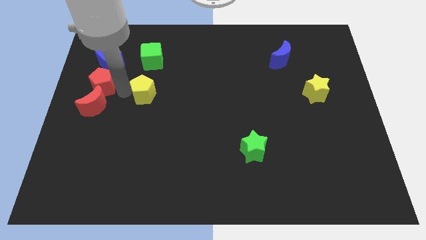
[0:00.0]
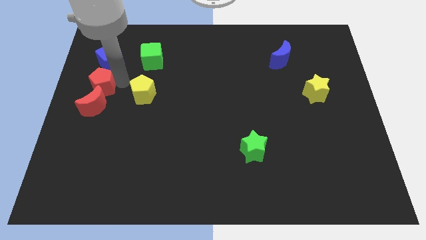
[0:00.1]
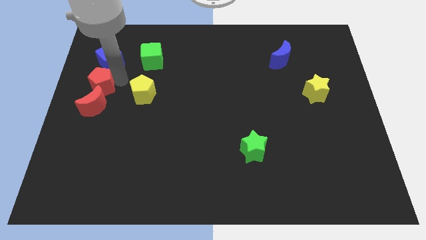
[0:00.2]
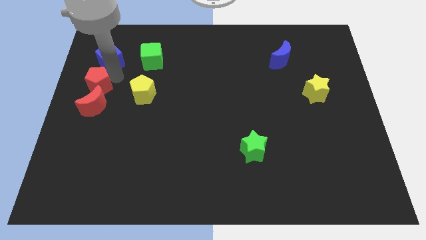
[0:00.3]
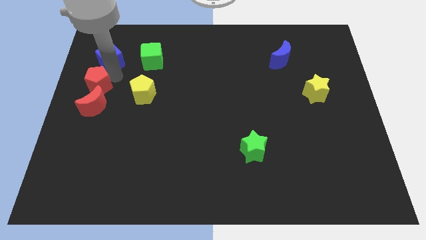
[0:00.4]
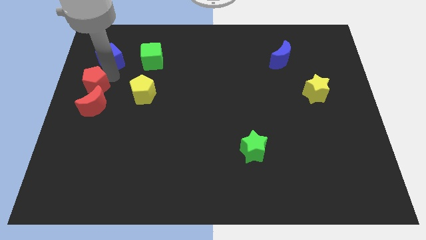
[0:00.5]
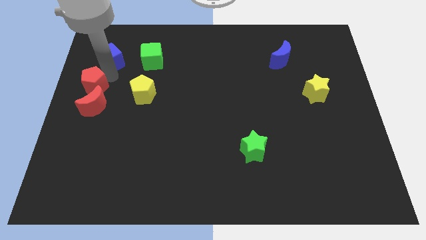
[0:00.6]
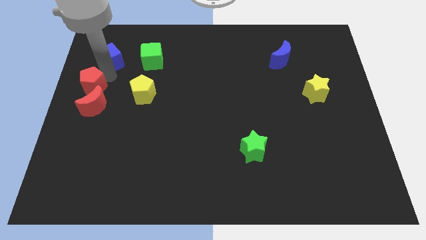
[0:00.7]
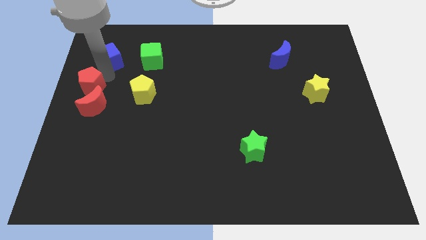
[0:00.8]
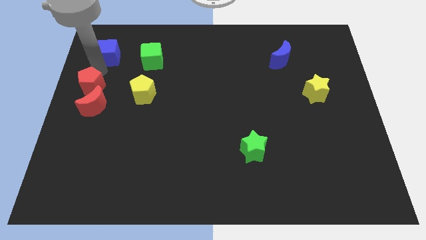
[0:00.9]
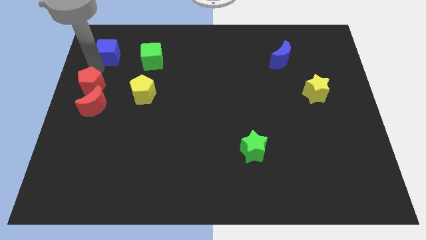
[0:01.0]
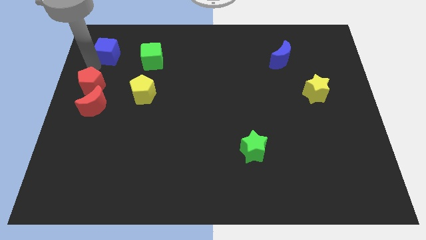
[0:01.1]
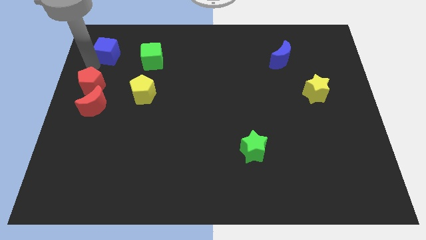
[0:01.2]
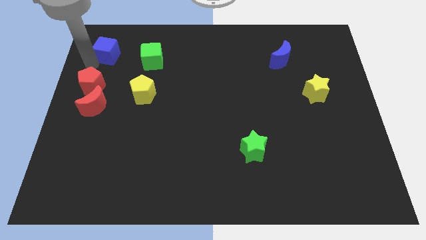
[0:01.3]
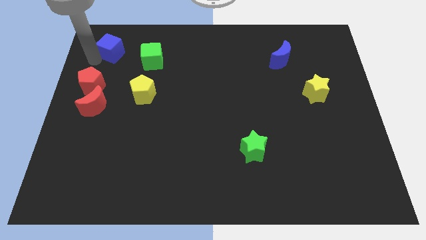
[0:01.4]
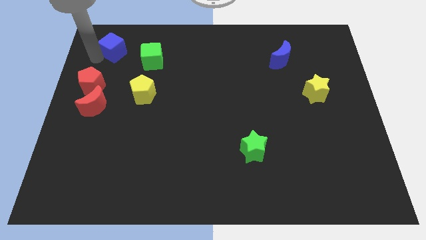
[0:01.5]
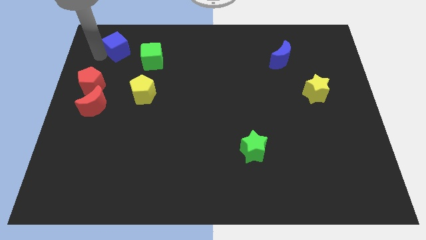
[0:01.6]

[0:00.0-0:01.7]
separate red pentagon and the blue cube

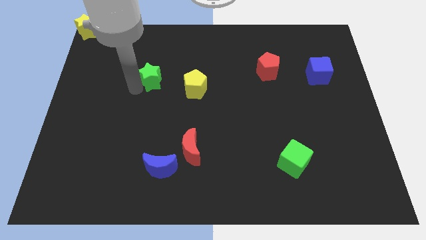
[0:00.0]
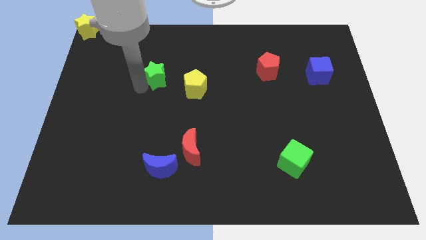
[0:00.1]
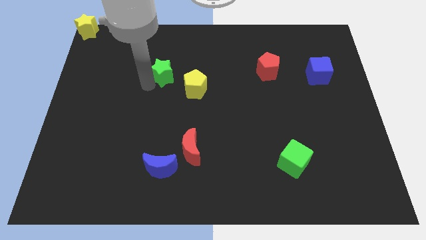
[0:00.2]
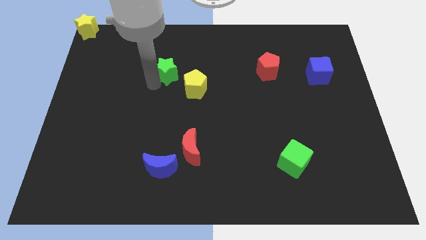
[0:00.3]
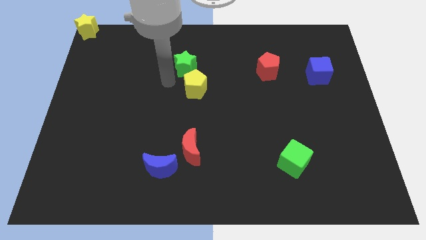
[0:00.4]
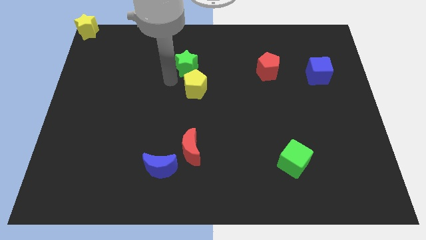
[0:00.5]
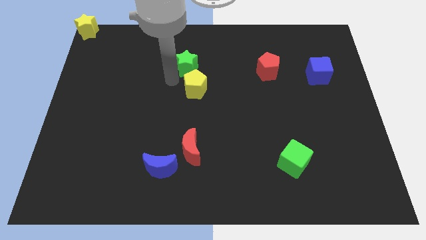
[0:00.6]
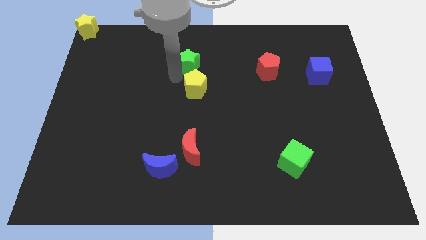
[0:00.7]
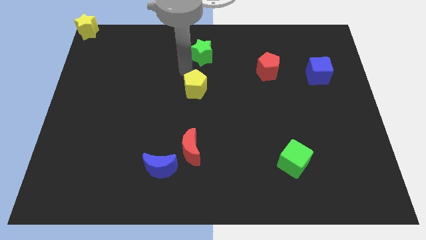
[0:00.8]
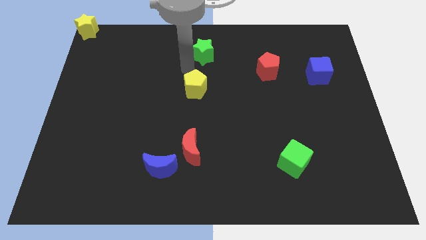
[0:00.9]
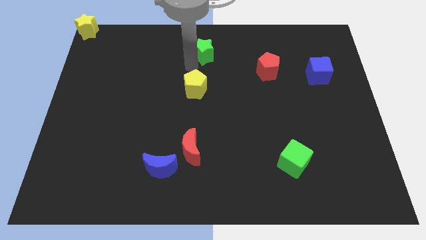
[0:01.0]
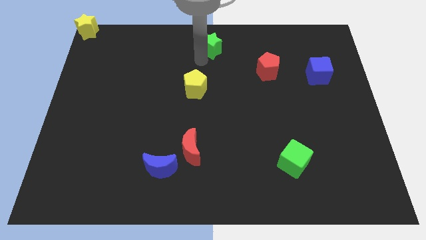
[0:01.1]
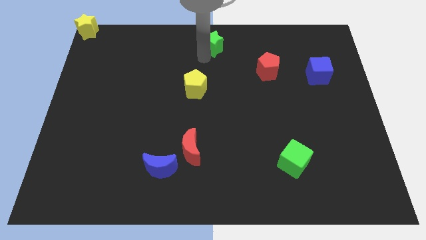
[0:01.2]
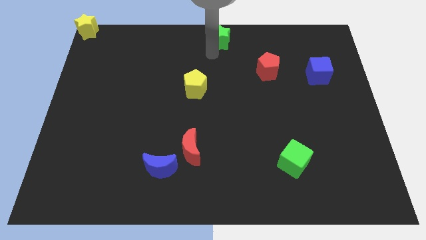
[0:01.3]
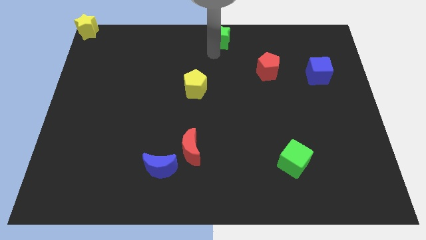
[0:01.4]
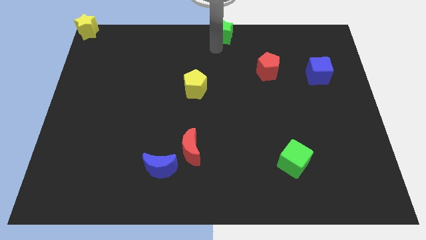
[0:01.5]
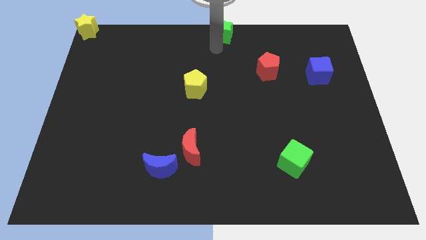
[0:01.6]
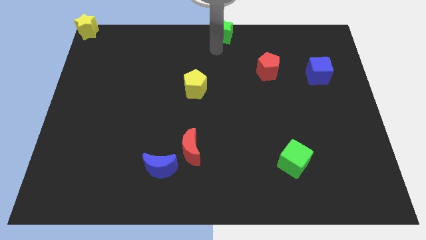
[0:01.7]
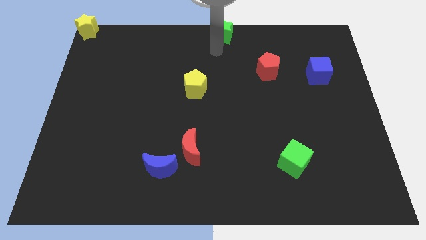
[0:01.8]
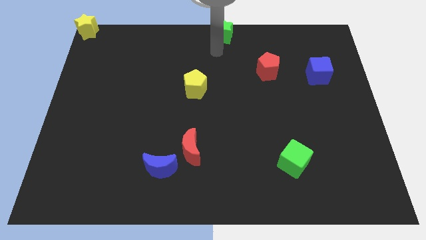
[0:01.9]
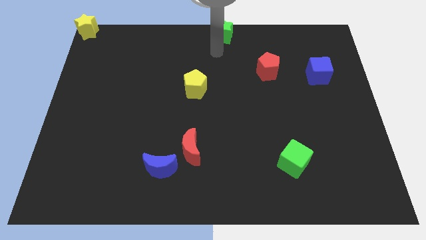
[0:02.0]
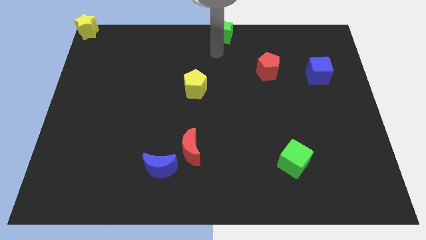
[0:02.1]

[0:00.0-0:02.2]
place green star to the top center of the board

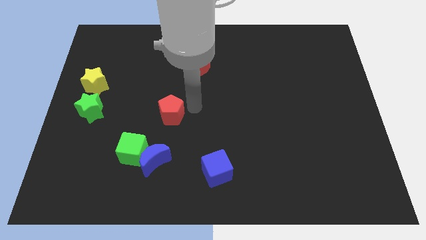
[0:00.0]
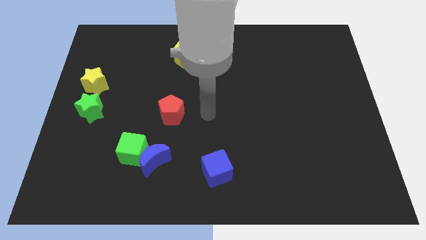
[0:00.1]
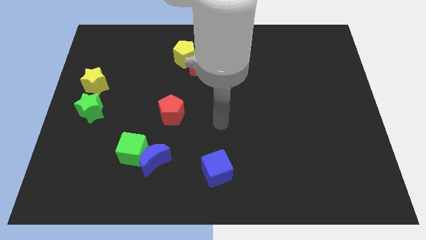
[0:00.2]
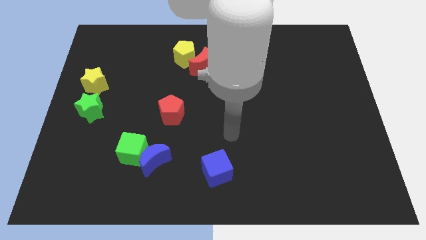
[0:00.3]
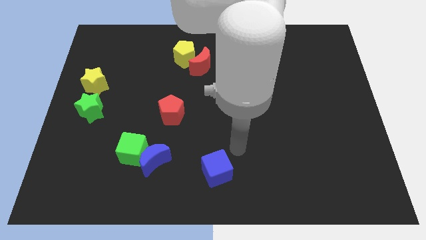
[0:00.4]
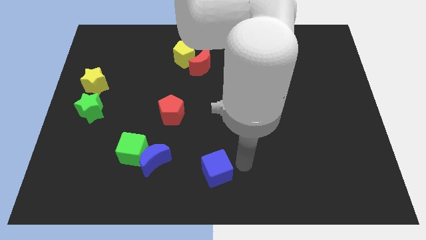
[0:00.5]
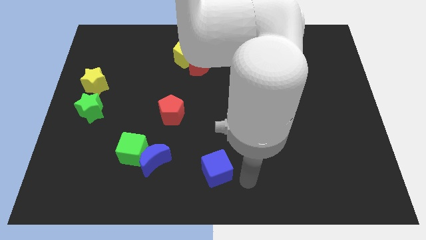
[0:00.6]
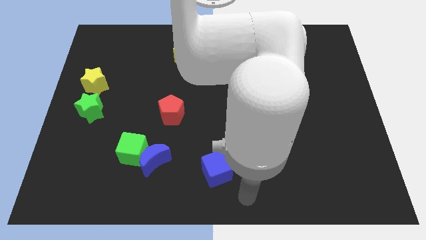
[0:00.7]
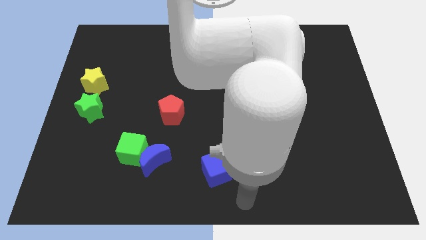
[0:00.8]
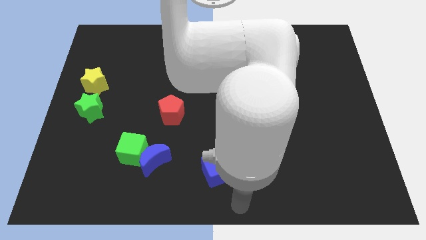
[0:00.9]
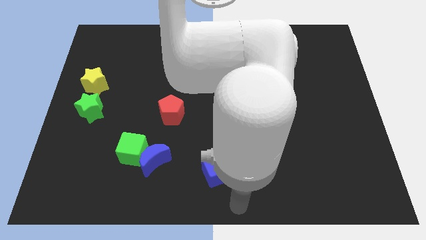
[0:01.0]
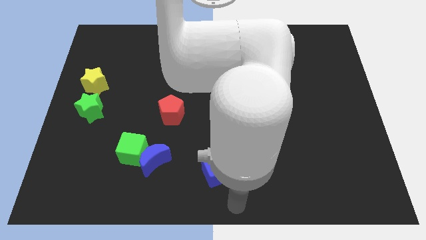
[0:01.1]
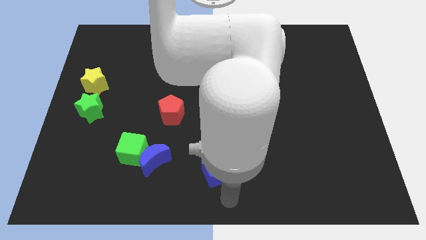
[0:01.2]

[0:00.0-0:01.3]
move your arm to the bottom of the blue cube

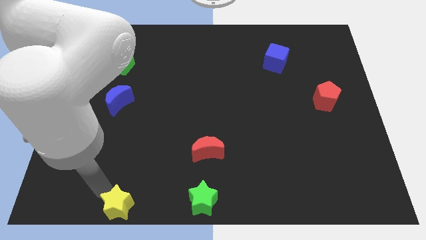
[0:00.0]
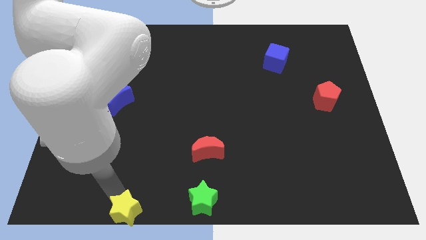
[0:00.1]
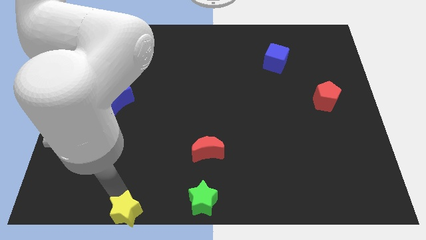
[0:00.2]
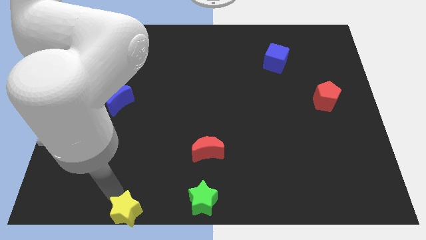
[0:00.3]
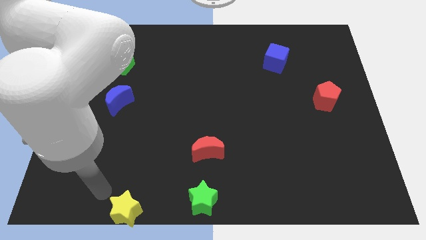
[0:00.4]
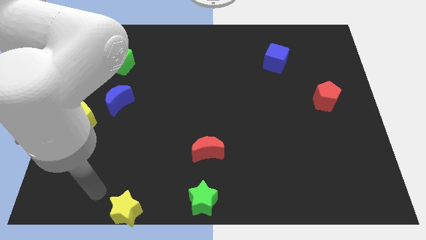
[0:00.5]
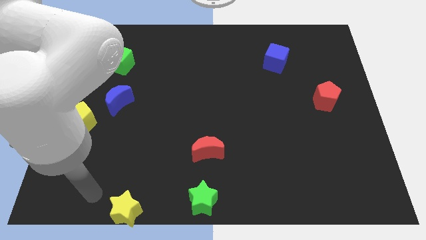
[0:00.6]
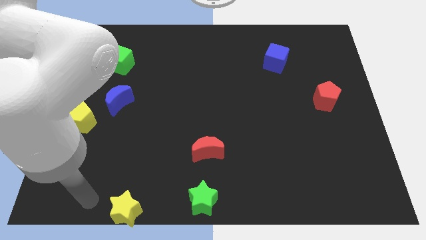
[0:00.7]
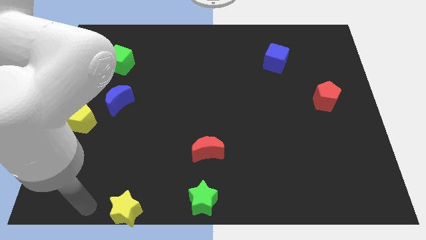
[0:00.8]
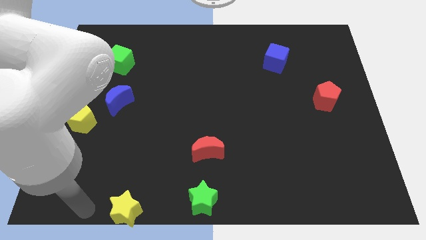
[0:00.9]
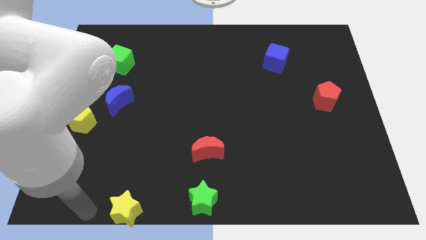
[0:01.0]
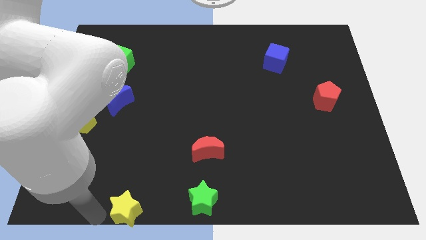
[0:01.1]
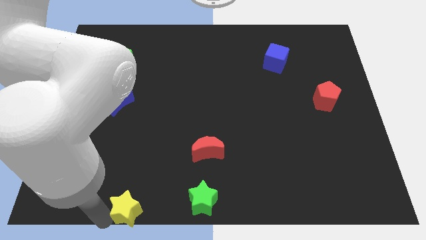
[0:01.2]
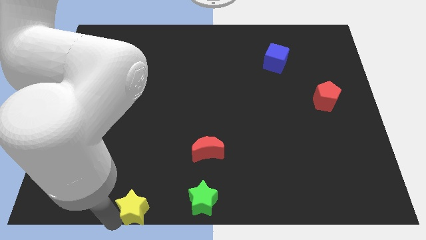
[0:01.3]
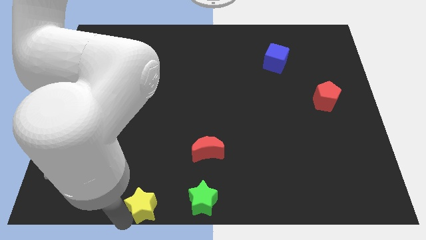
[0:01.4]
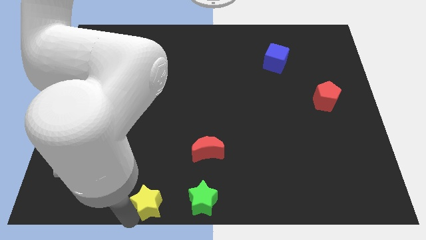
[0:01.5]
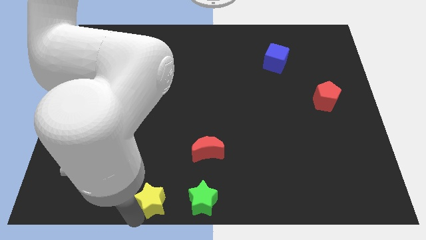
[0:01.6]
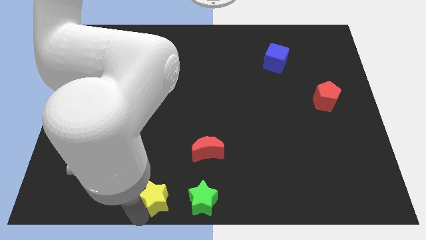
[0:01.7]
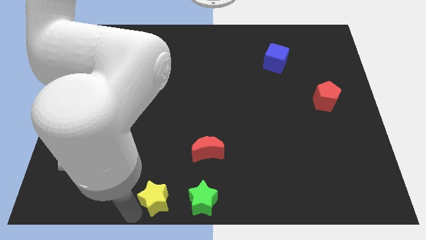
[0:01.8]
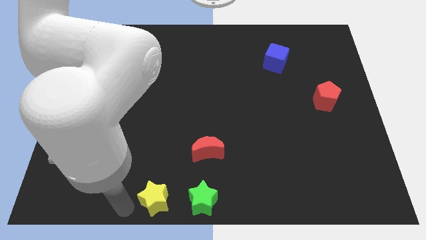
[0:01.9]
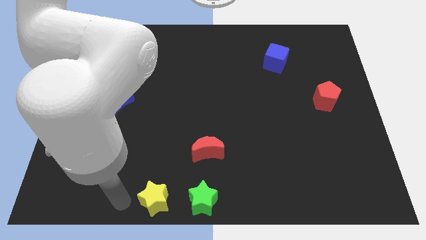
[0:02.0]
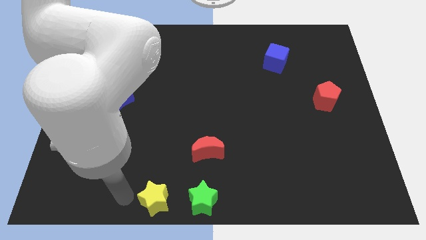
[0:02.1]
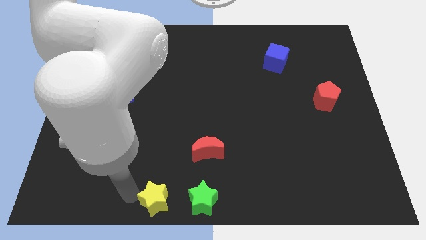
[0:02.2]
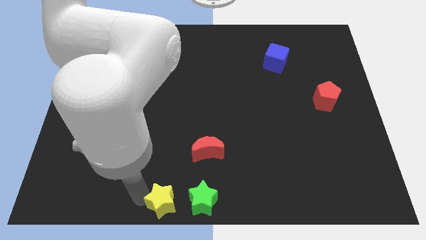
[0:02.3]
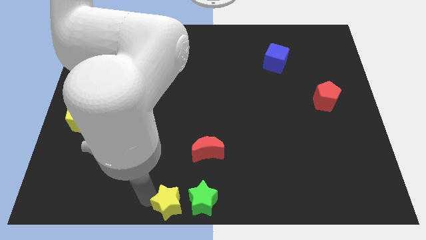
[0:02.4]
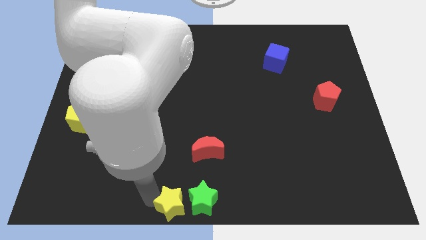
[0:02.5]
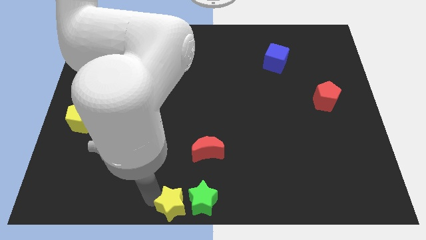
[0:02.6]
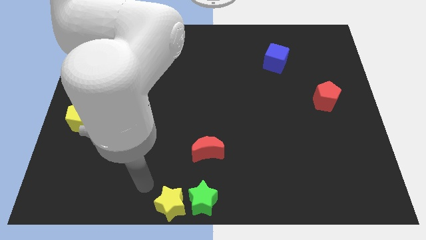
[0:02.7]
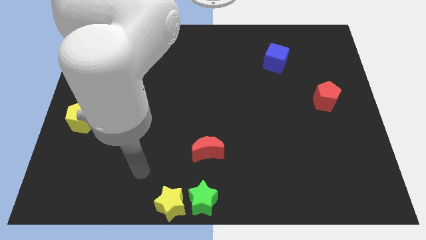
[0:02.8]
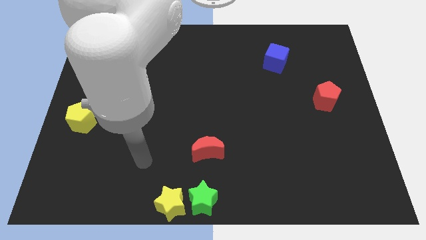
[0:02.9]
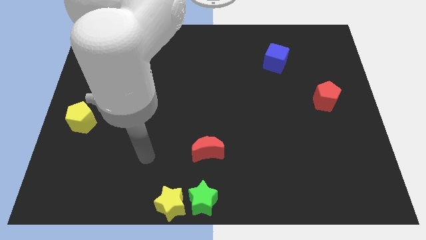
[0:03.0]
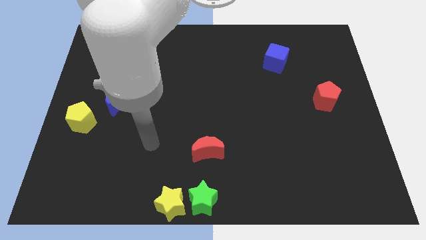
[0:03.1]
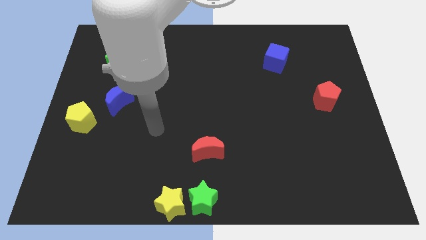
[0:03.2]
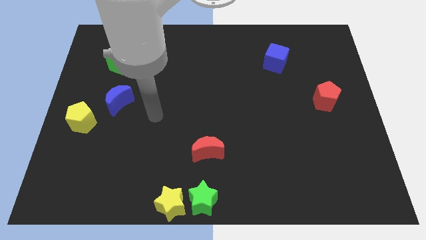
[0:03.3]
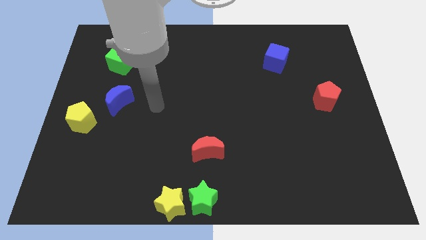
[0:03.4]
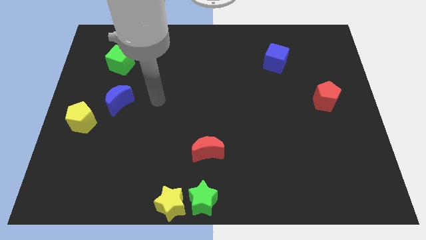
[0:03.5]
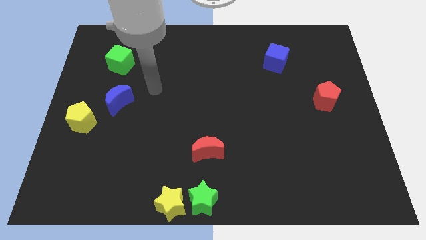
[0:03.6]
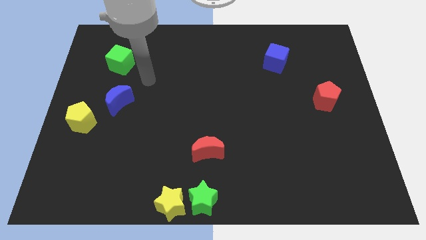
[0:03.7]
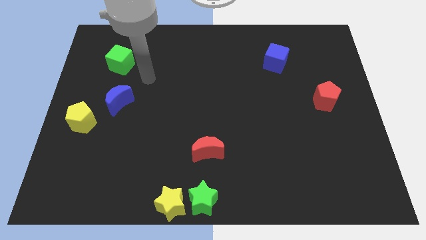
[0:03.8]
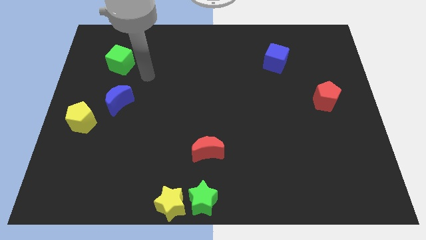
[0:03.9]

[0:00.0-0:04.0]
move the yellow star left to the green star
